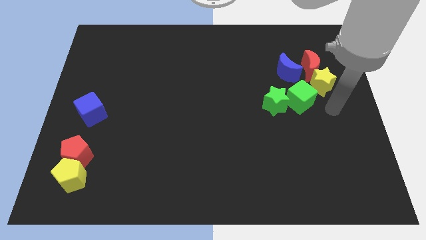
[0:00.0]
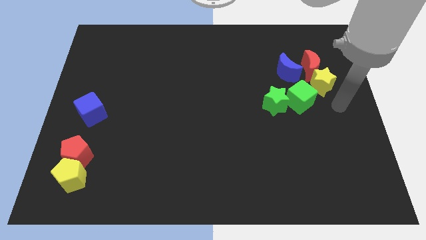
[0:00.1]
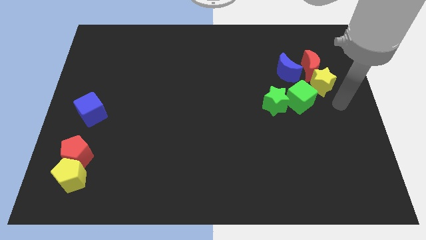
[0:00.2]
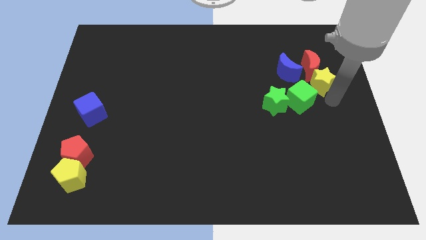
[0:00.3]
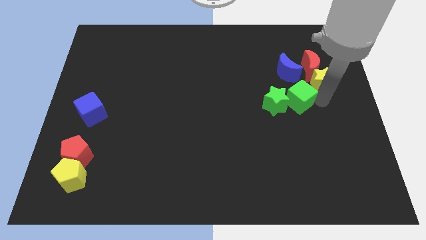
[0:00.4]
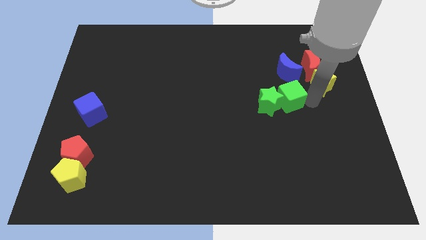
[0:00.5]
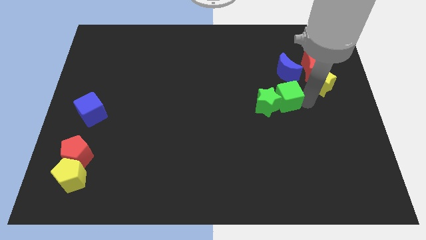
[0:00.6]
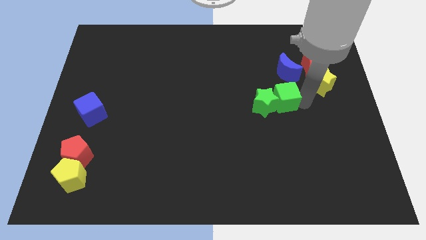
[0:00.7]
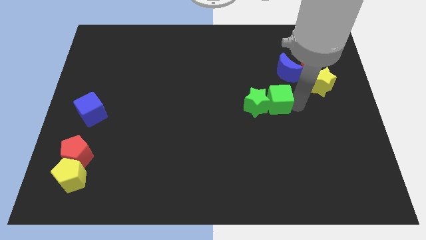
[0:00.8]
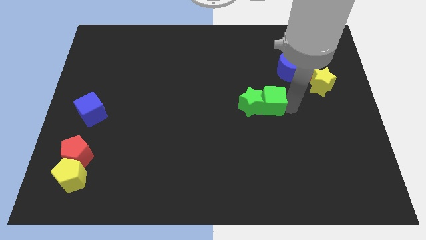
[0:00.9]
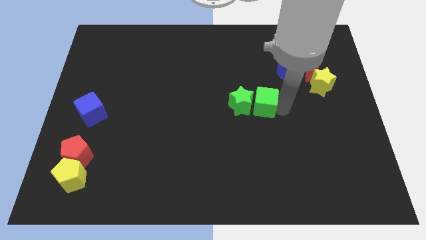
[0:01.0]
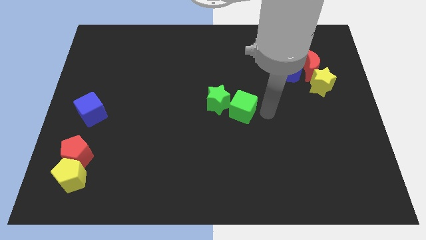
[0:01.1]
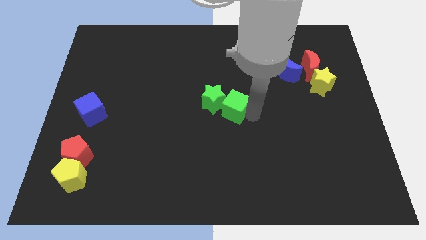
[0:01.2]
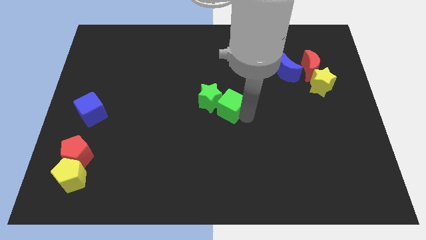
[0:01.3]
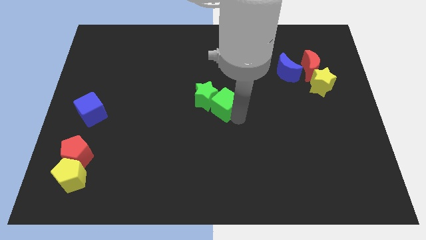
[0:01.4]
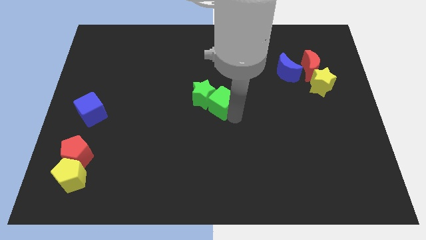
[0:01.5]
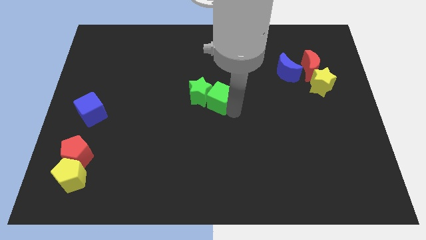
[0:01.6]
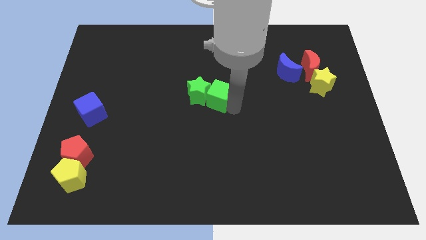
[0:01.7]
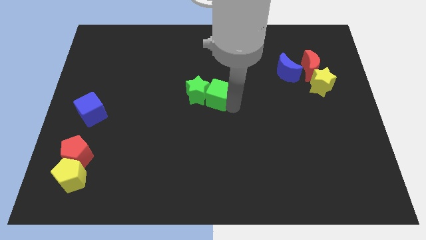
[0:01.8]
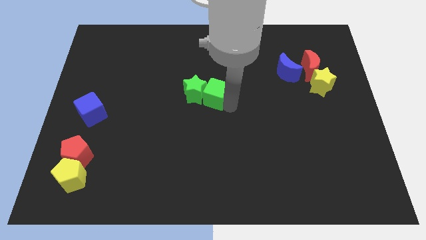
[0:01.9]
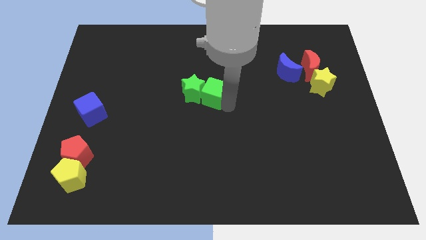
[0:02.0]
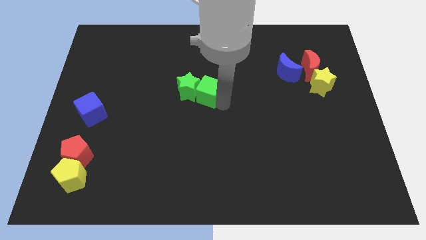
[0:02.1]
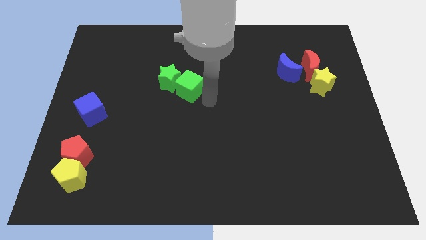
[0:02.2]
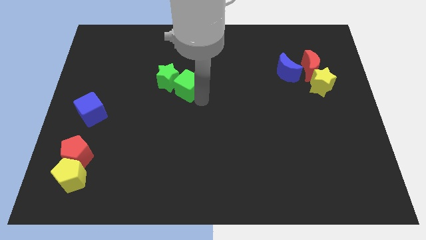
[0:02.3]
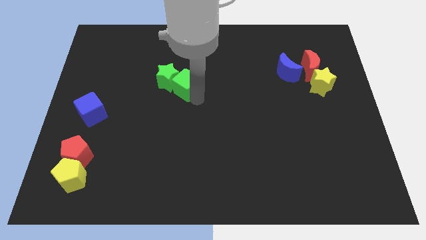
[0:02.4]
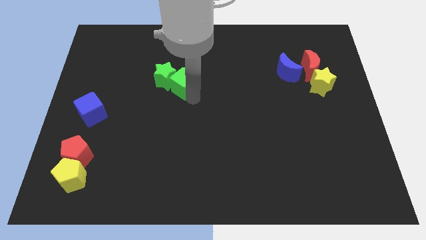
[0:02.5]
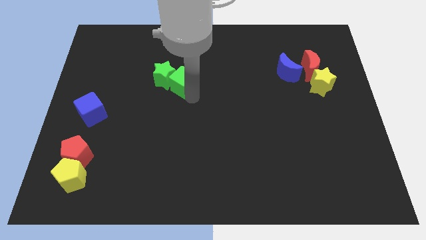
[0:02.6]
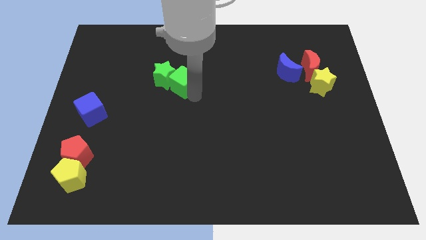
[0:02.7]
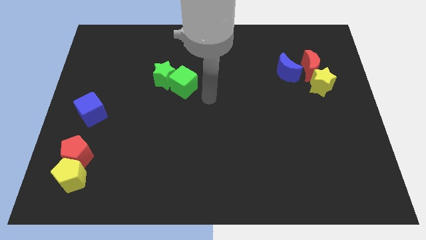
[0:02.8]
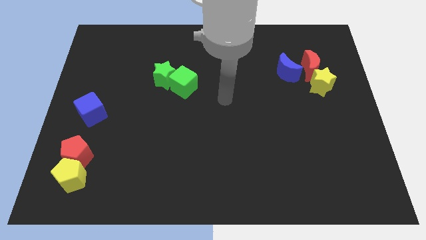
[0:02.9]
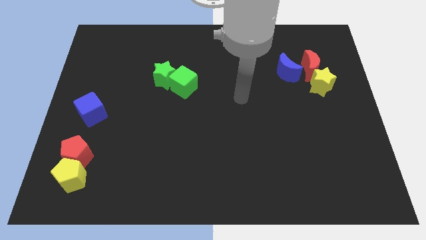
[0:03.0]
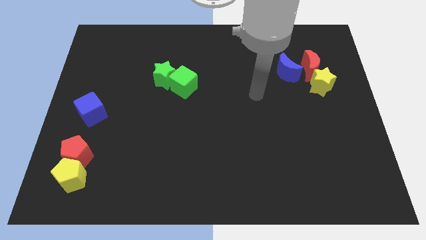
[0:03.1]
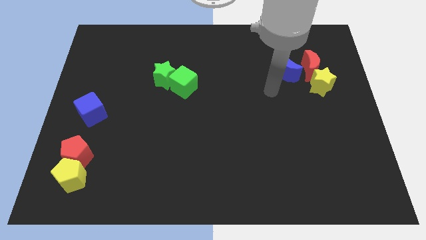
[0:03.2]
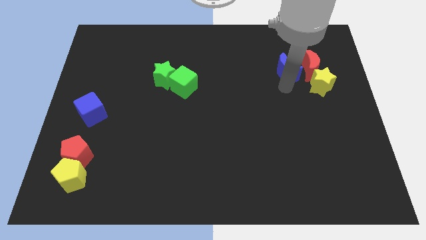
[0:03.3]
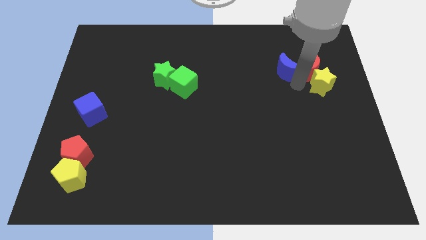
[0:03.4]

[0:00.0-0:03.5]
push the green star with the help of a green cube to the top left corner

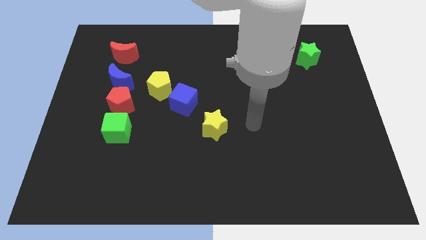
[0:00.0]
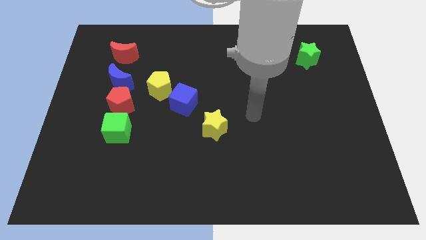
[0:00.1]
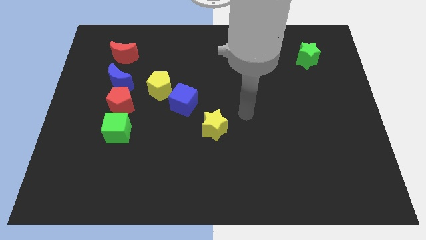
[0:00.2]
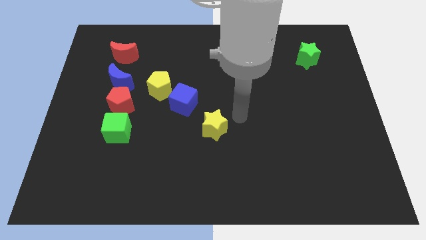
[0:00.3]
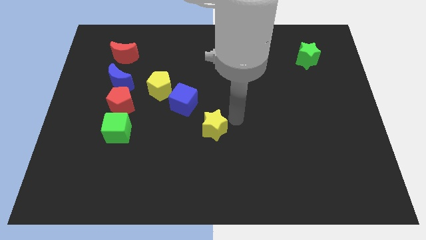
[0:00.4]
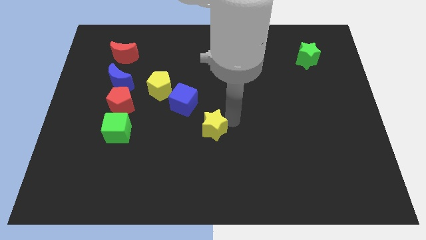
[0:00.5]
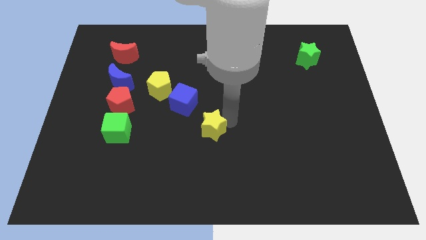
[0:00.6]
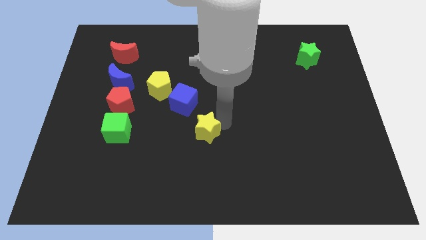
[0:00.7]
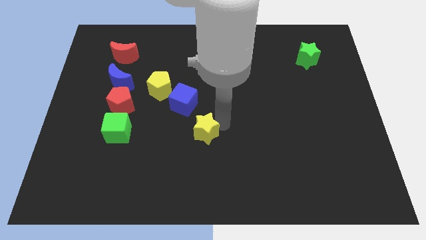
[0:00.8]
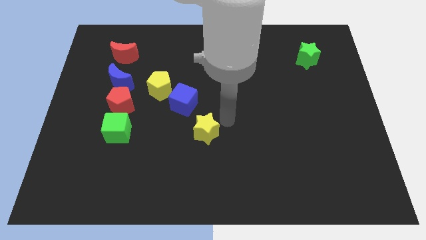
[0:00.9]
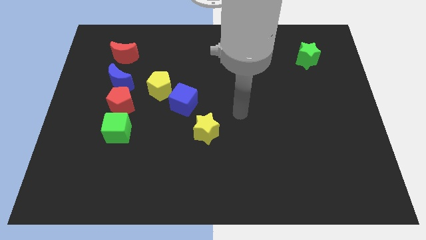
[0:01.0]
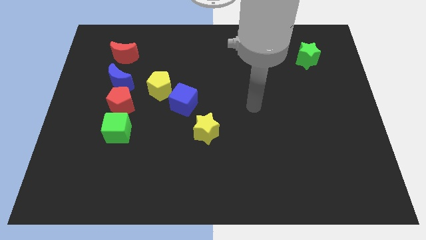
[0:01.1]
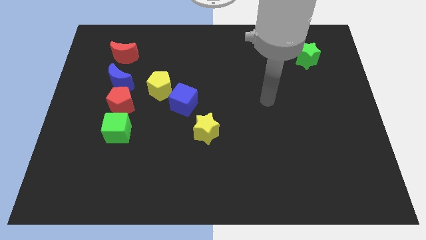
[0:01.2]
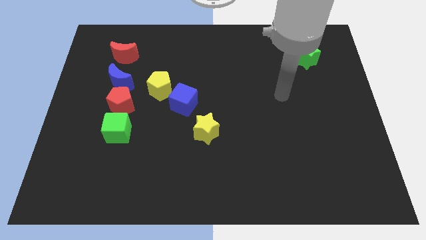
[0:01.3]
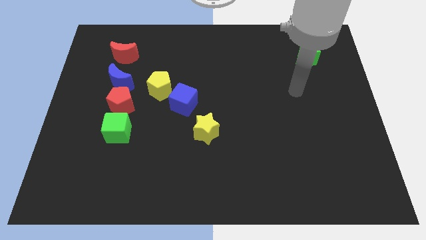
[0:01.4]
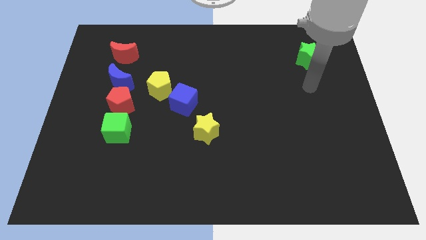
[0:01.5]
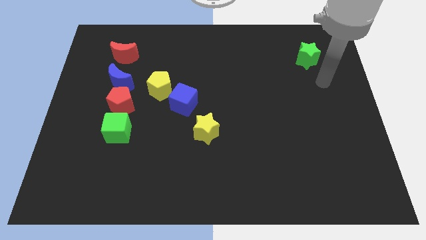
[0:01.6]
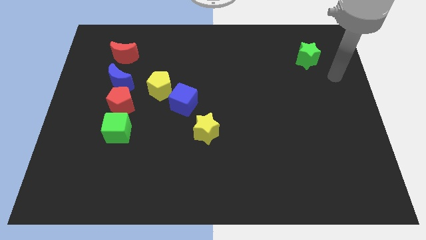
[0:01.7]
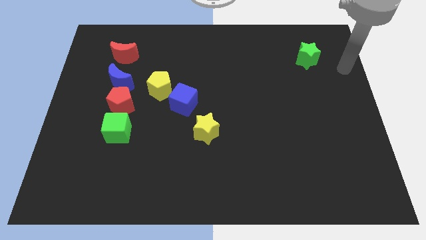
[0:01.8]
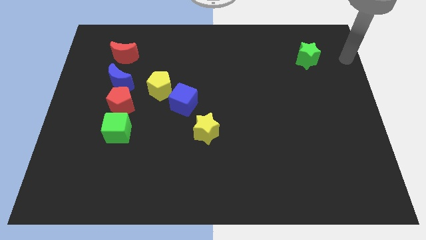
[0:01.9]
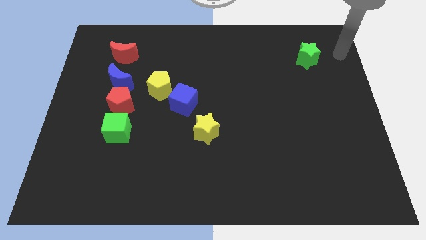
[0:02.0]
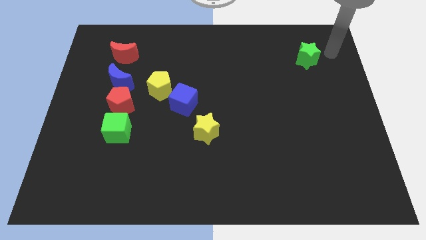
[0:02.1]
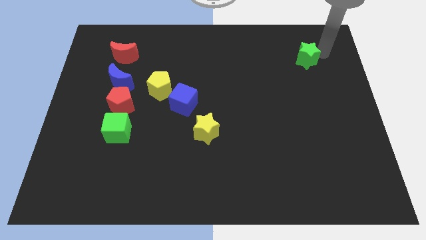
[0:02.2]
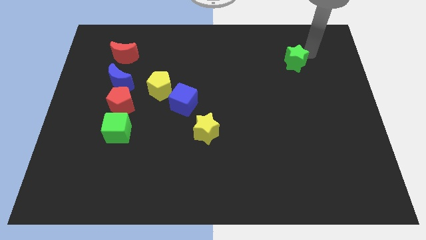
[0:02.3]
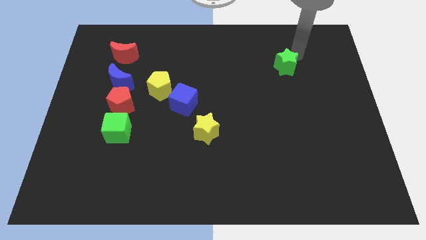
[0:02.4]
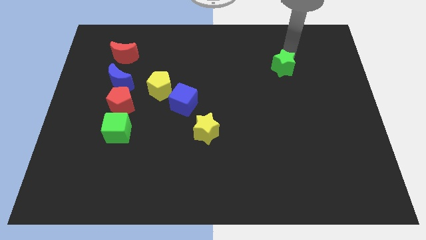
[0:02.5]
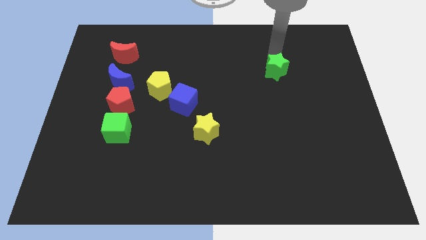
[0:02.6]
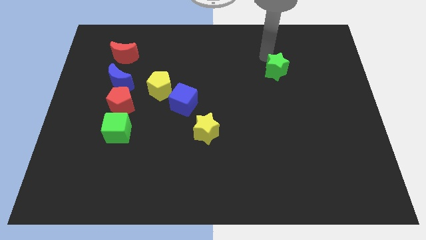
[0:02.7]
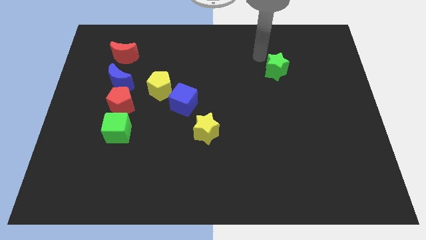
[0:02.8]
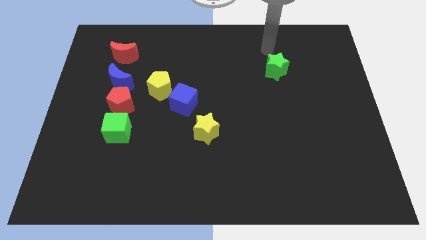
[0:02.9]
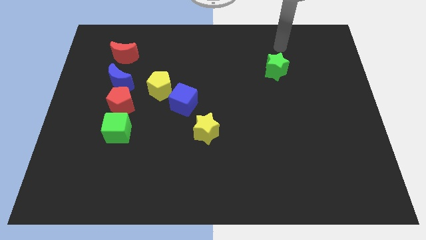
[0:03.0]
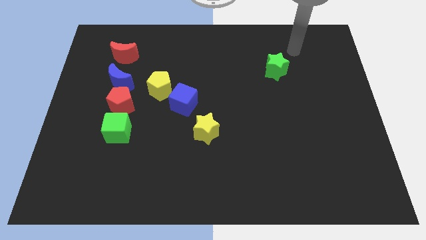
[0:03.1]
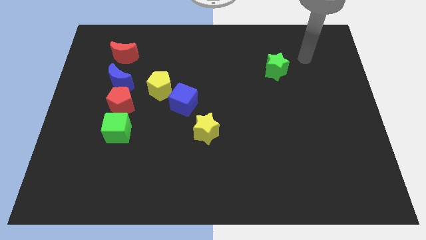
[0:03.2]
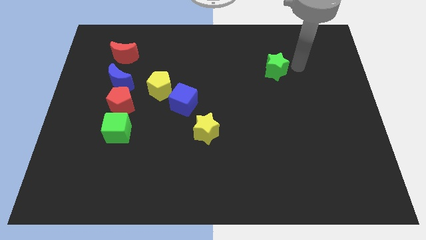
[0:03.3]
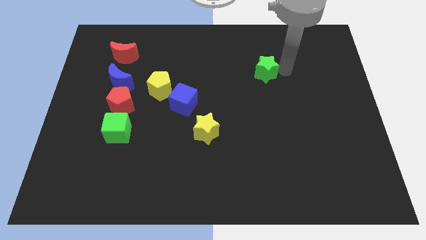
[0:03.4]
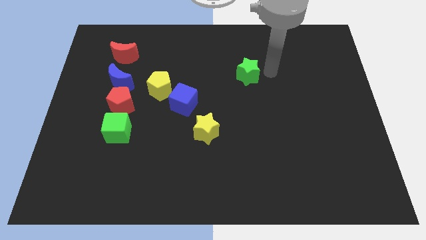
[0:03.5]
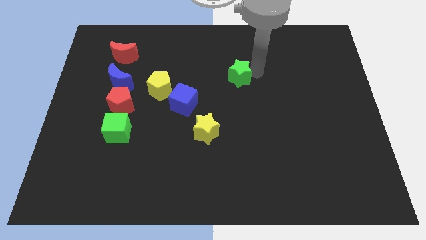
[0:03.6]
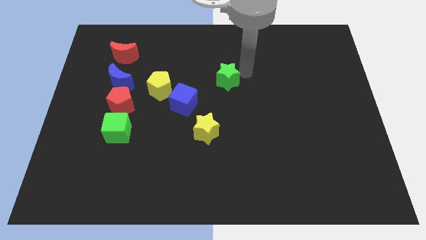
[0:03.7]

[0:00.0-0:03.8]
place the green star above the yellow star

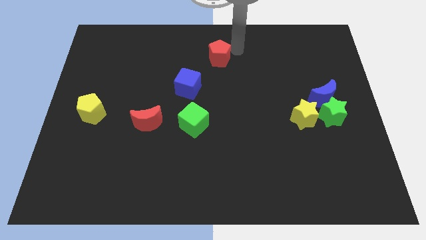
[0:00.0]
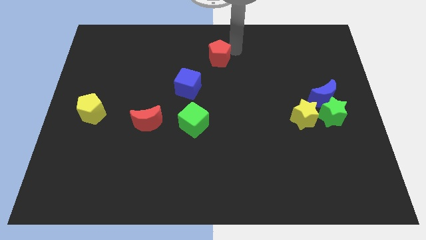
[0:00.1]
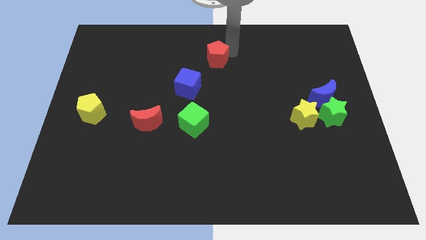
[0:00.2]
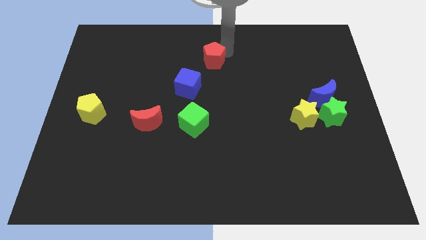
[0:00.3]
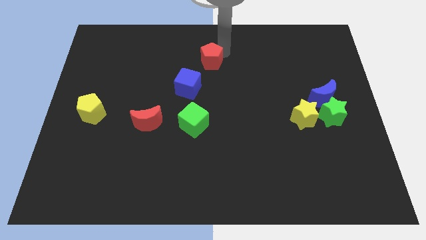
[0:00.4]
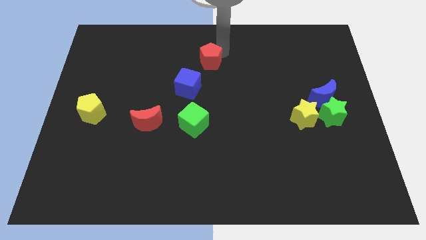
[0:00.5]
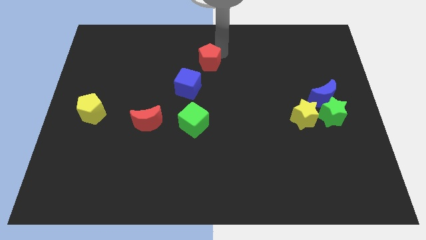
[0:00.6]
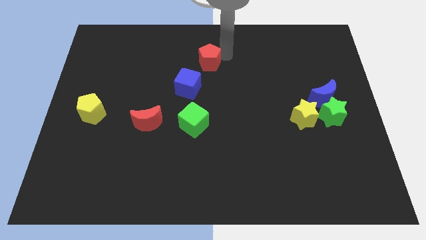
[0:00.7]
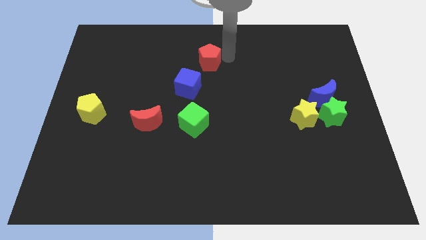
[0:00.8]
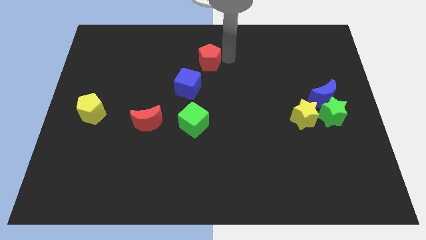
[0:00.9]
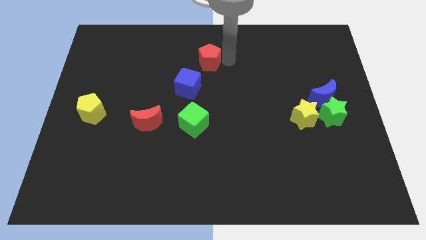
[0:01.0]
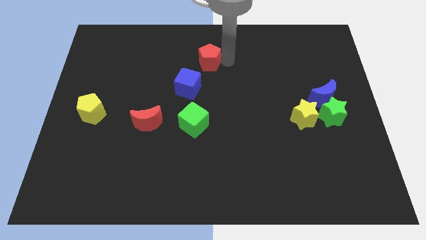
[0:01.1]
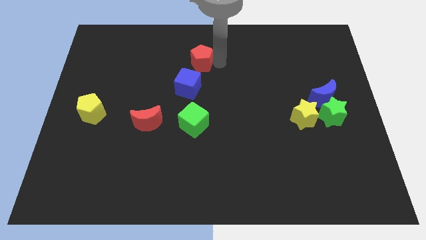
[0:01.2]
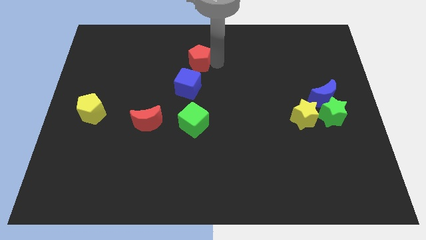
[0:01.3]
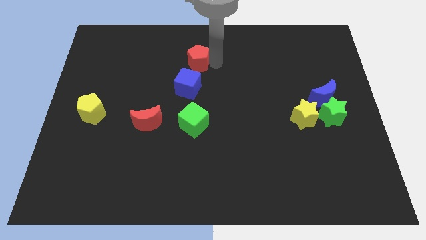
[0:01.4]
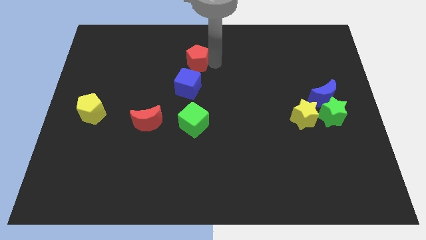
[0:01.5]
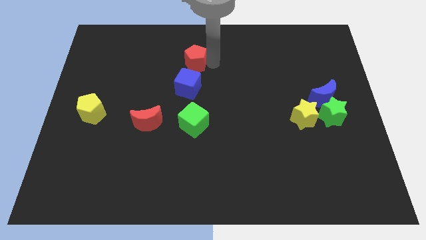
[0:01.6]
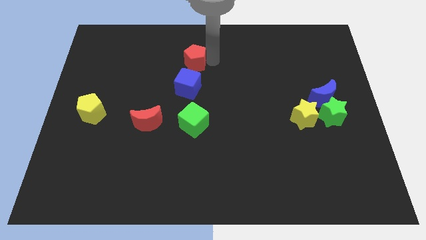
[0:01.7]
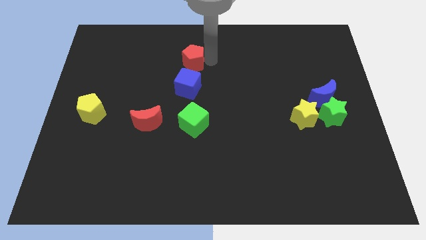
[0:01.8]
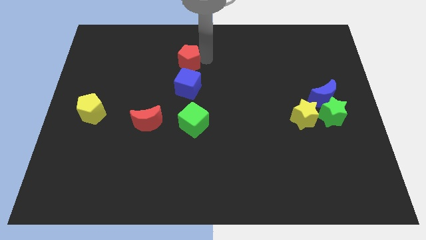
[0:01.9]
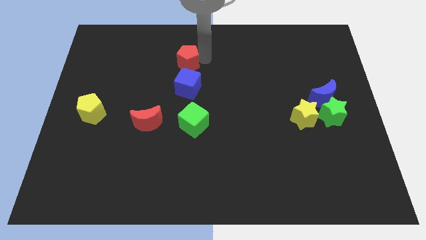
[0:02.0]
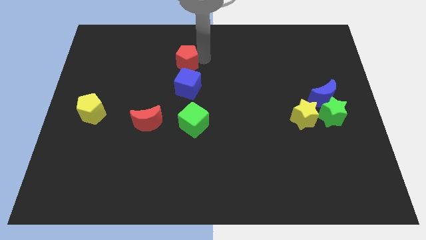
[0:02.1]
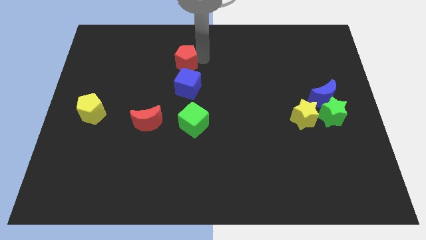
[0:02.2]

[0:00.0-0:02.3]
place the red pentagon top of the blue square
